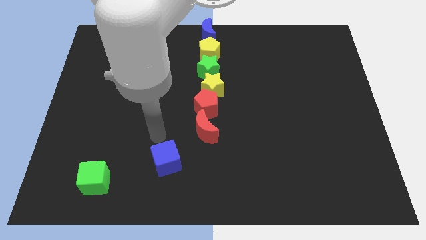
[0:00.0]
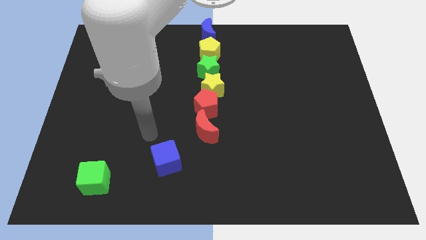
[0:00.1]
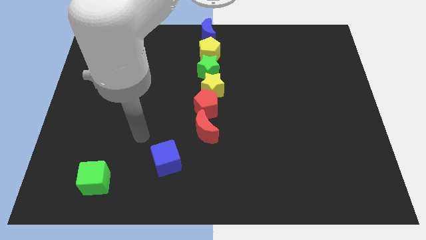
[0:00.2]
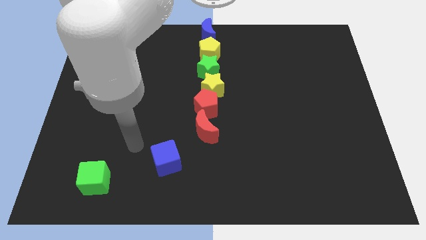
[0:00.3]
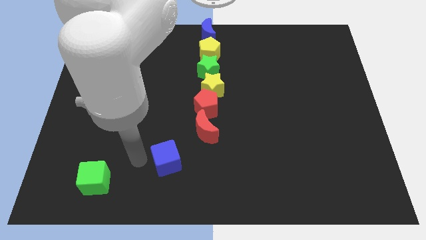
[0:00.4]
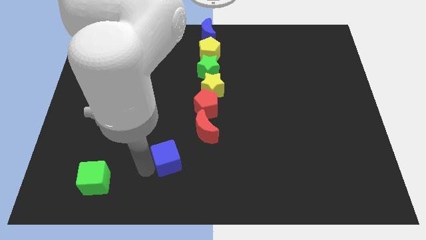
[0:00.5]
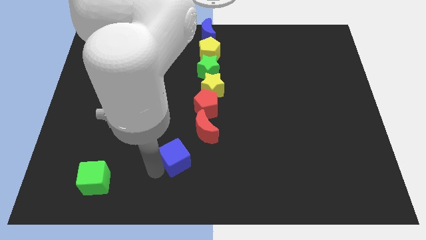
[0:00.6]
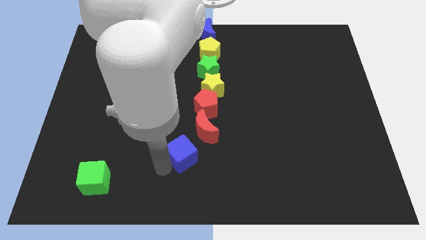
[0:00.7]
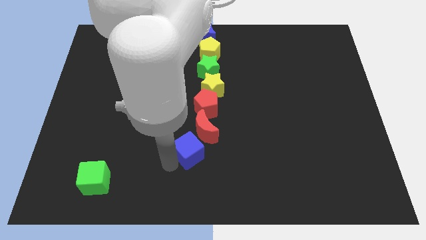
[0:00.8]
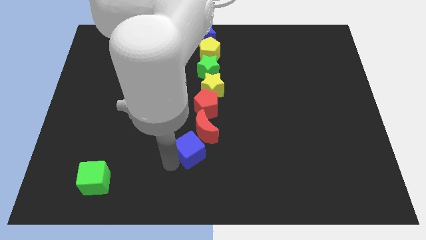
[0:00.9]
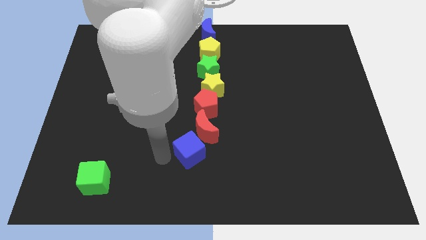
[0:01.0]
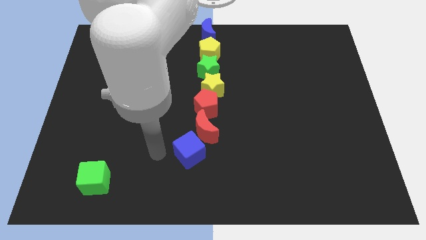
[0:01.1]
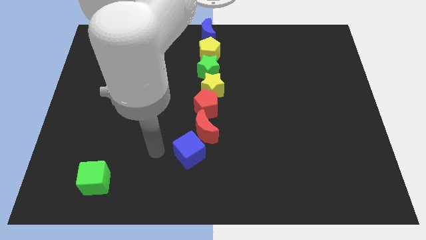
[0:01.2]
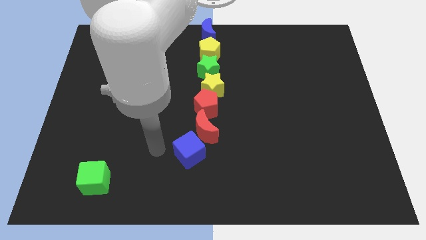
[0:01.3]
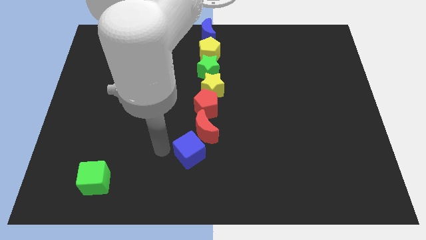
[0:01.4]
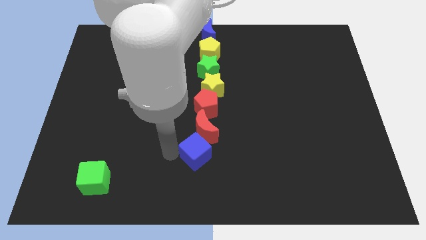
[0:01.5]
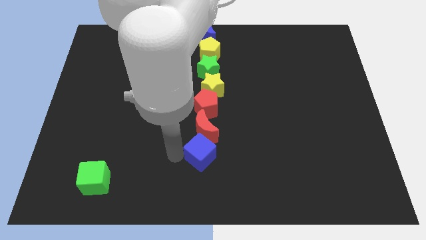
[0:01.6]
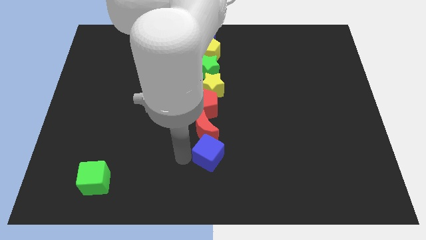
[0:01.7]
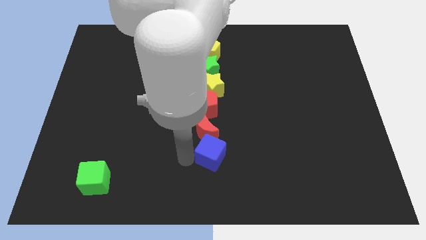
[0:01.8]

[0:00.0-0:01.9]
place the blue cube to the bottom side of the red crescent

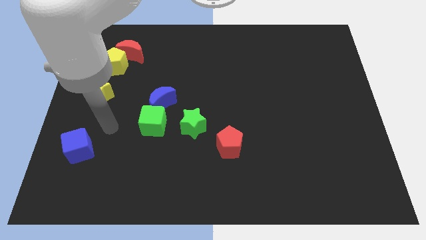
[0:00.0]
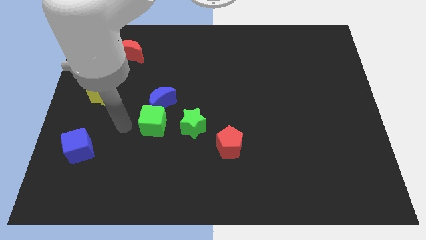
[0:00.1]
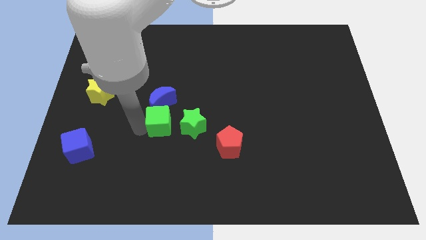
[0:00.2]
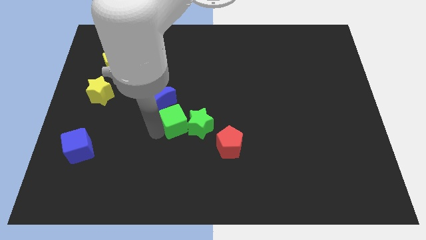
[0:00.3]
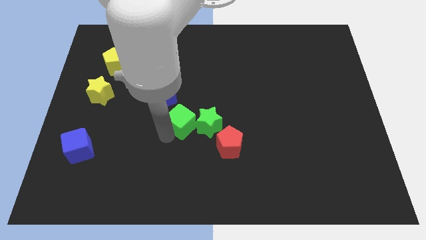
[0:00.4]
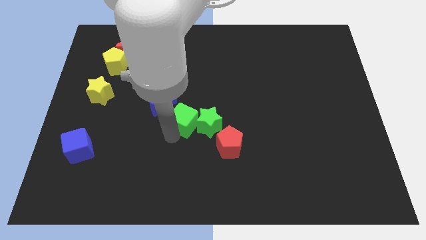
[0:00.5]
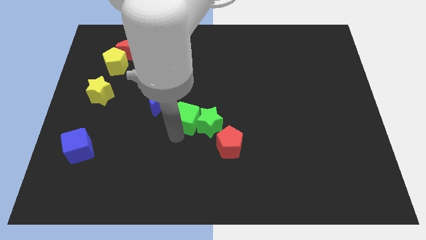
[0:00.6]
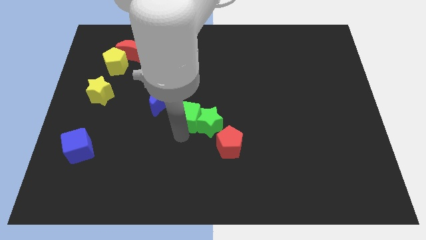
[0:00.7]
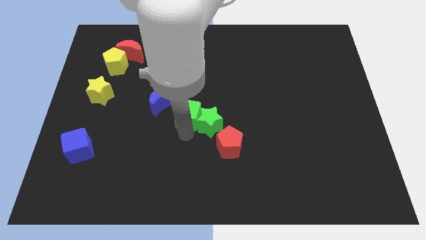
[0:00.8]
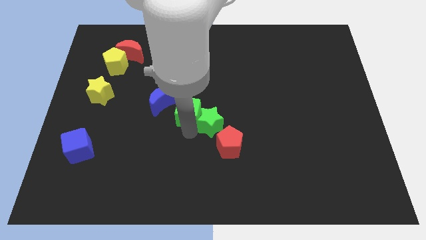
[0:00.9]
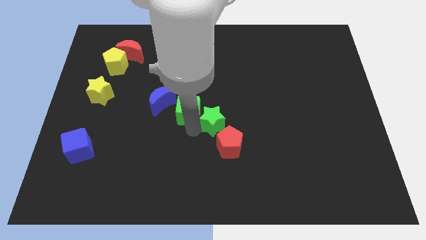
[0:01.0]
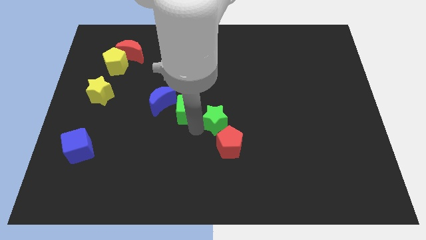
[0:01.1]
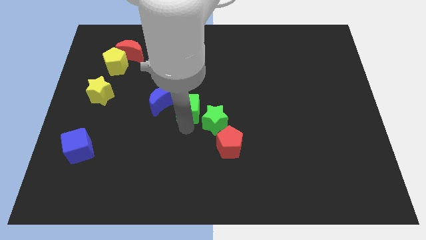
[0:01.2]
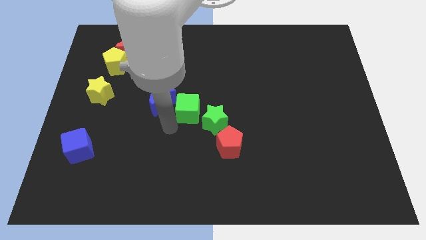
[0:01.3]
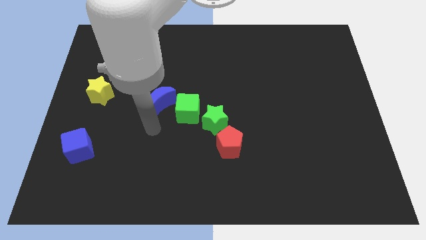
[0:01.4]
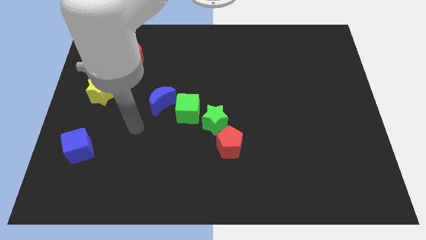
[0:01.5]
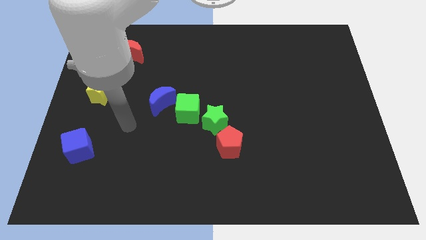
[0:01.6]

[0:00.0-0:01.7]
push the green cube and green star towards right

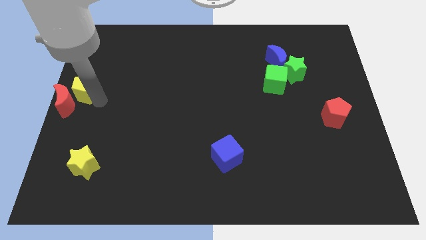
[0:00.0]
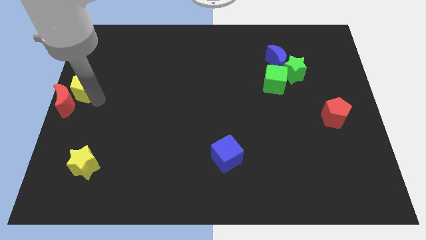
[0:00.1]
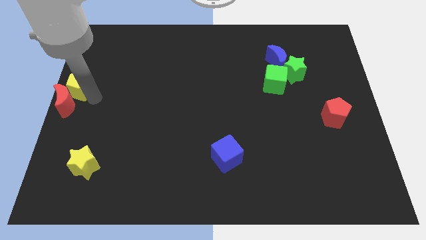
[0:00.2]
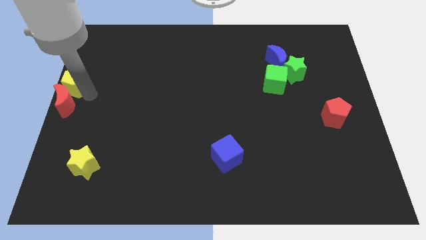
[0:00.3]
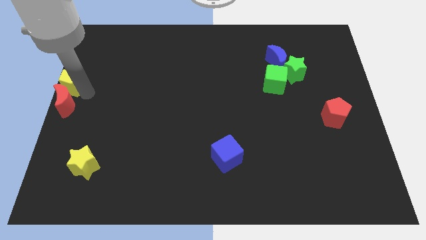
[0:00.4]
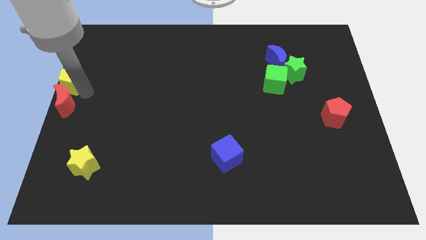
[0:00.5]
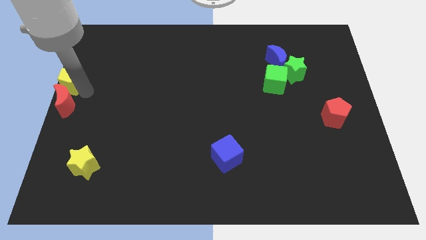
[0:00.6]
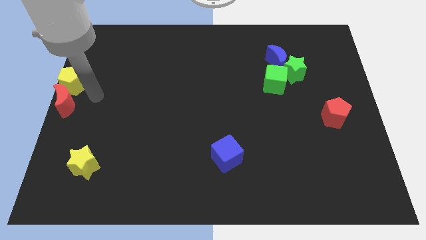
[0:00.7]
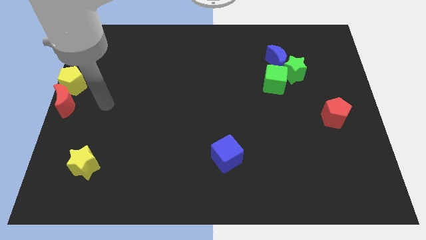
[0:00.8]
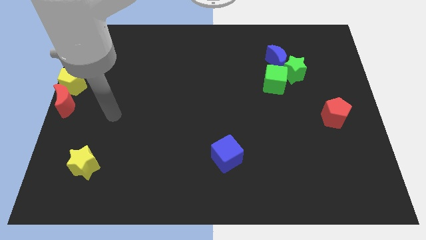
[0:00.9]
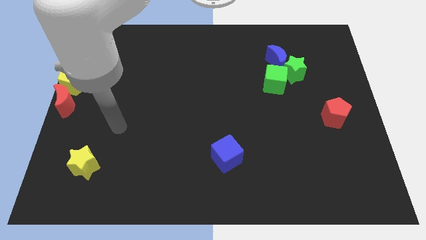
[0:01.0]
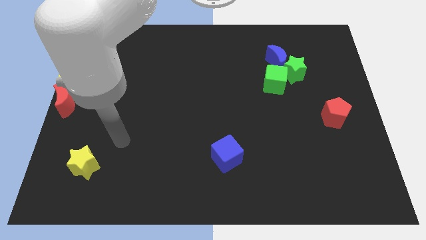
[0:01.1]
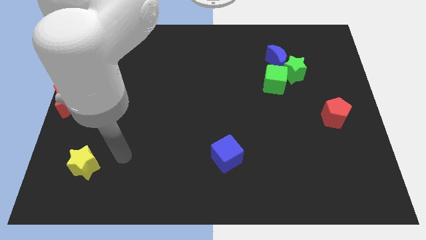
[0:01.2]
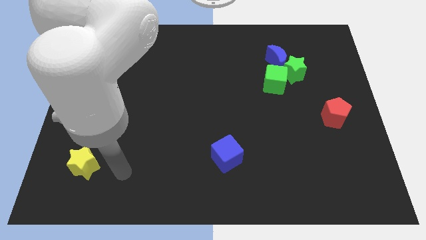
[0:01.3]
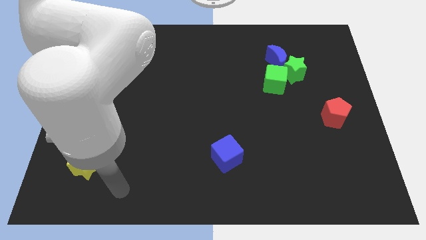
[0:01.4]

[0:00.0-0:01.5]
place yellow pentagon to the top of the red crescent

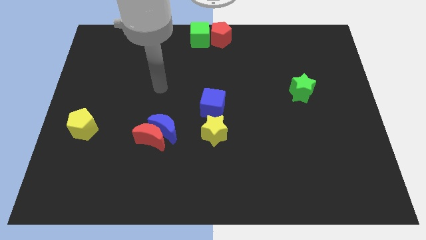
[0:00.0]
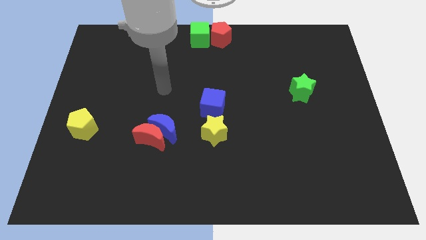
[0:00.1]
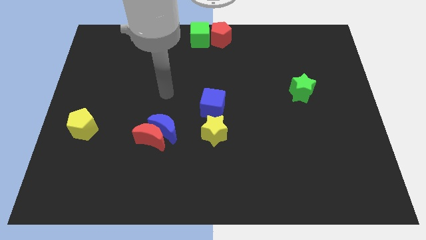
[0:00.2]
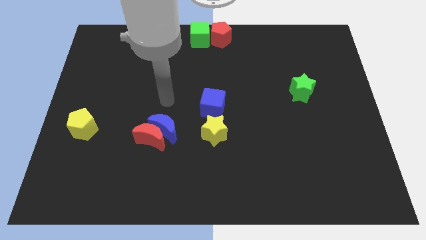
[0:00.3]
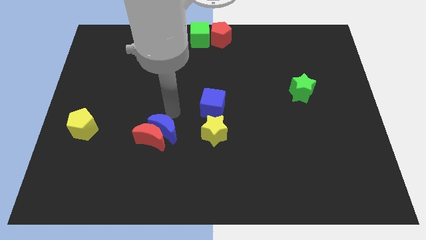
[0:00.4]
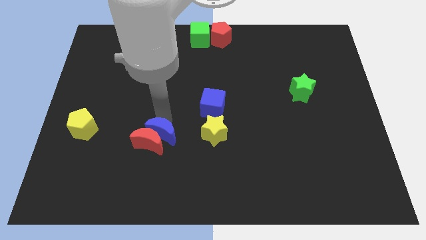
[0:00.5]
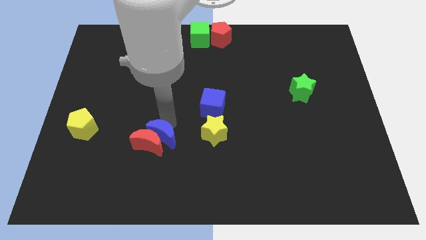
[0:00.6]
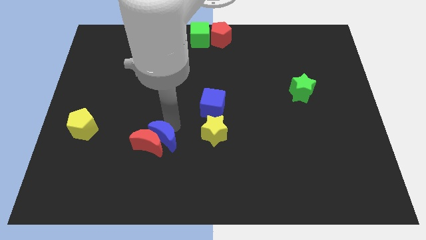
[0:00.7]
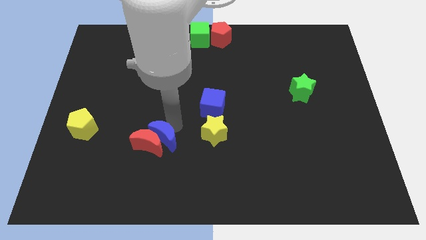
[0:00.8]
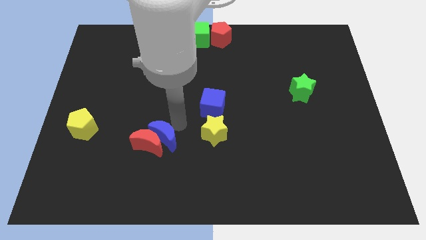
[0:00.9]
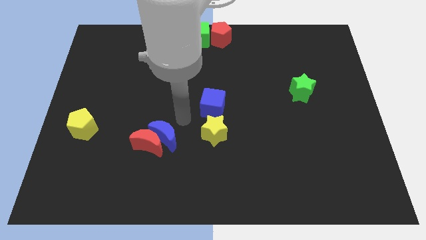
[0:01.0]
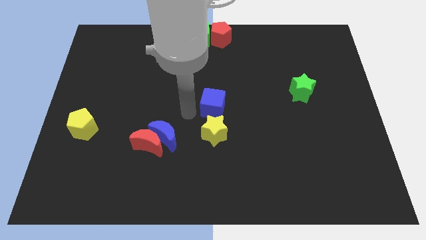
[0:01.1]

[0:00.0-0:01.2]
touch the blue moon with your arm

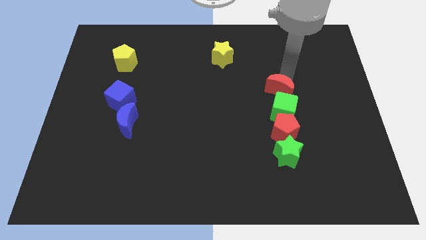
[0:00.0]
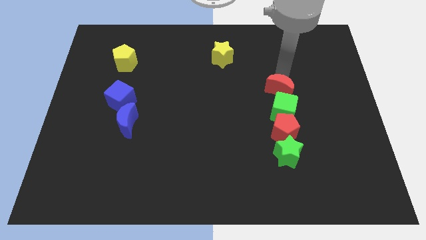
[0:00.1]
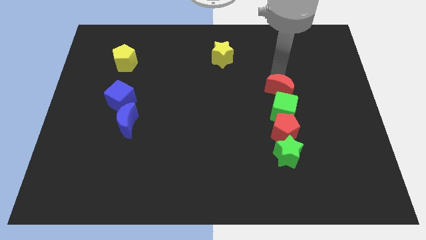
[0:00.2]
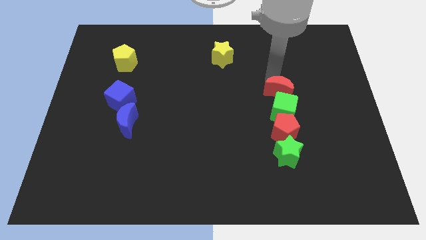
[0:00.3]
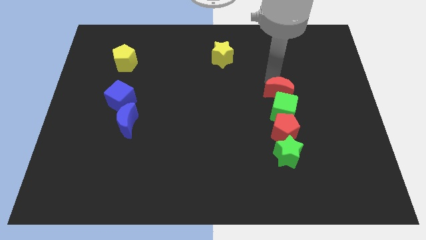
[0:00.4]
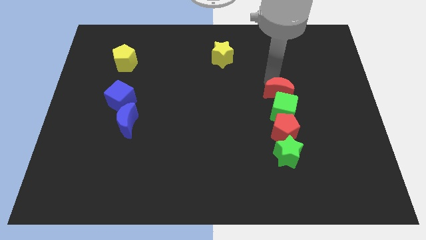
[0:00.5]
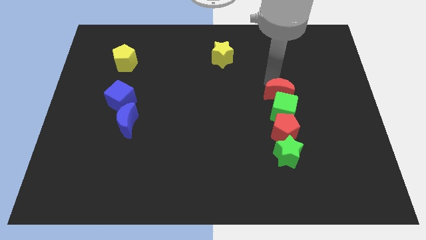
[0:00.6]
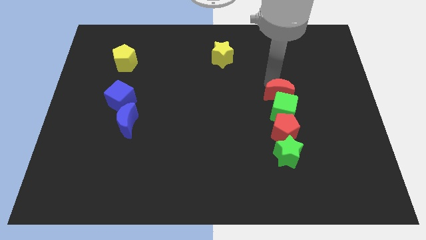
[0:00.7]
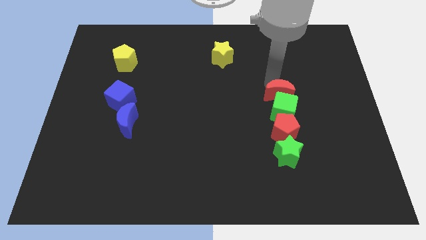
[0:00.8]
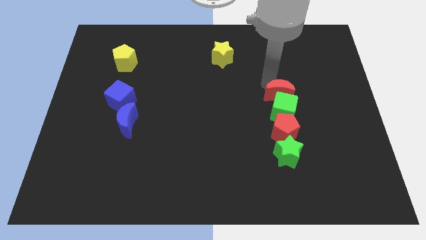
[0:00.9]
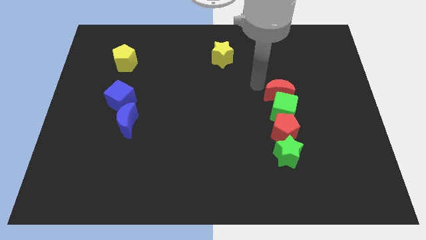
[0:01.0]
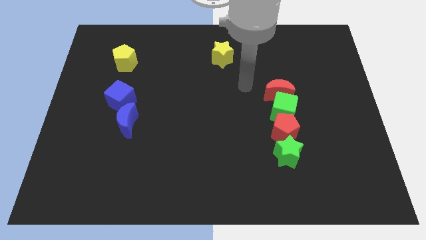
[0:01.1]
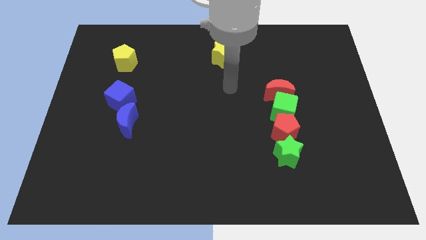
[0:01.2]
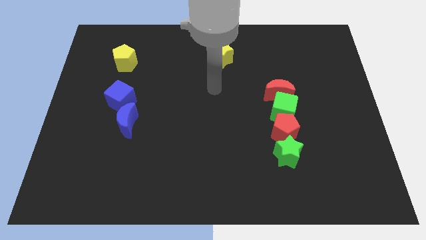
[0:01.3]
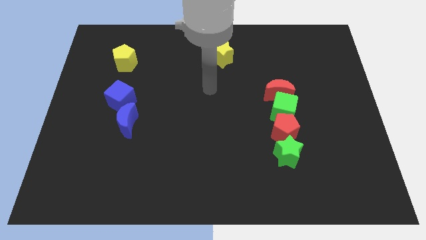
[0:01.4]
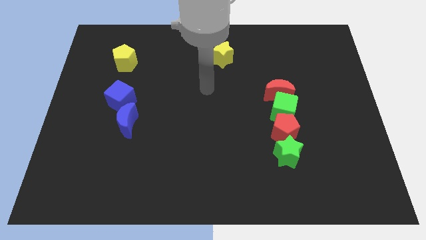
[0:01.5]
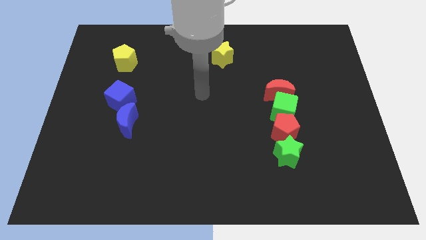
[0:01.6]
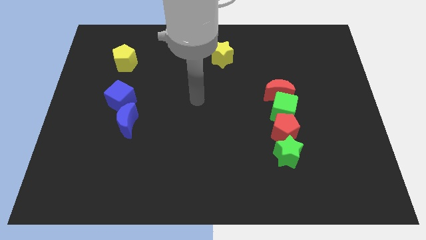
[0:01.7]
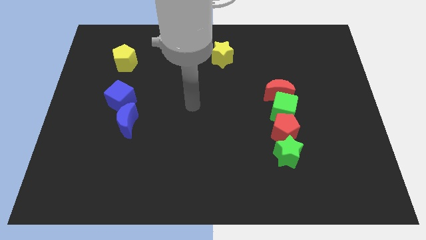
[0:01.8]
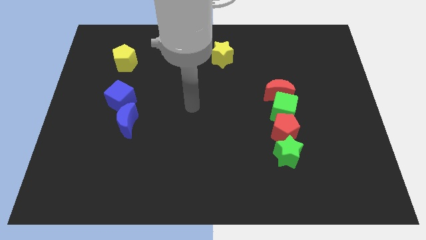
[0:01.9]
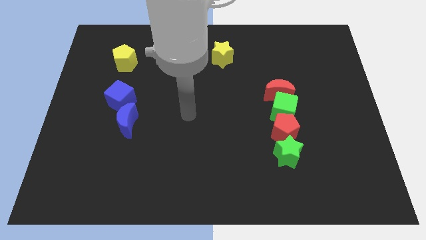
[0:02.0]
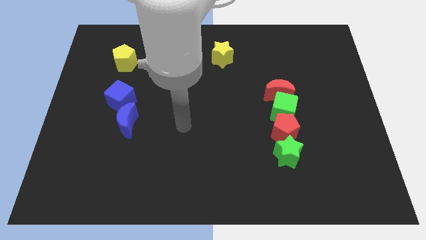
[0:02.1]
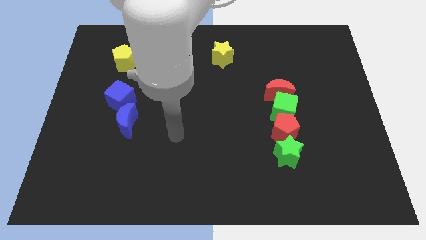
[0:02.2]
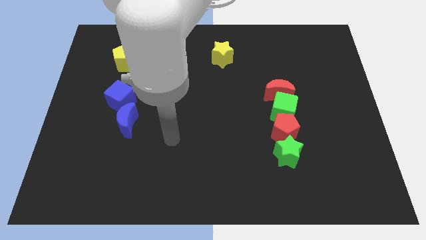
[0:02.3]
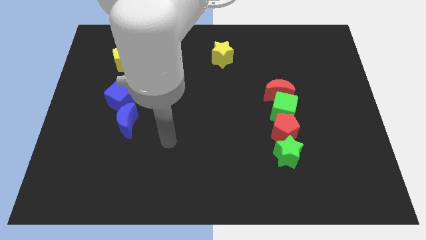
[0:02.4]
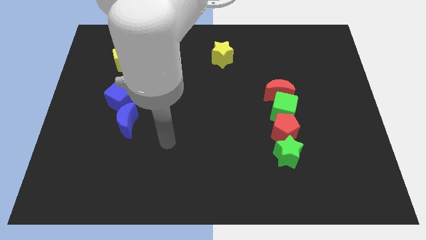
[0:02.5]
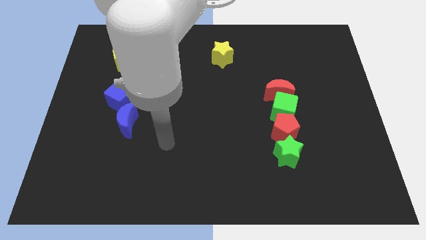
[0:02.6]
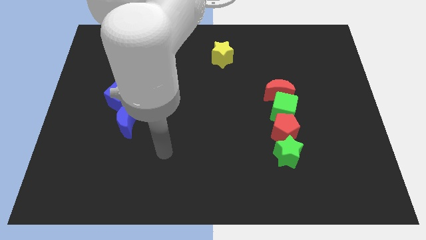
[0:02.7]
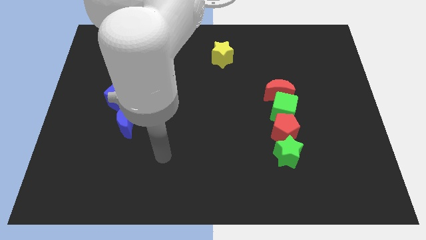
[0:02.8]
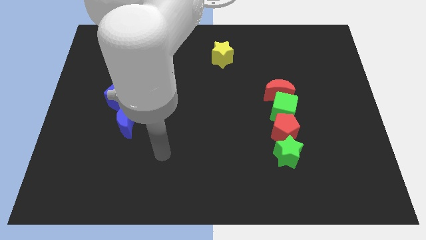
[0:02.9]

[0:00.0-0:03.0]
move your arm towards the blue moon
